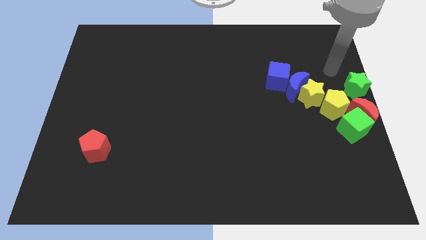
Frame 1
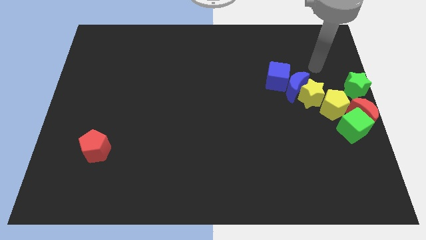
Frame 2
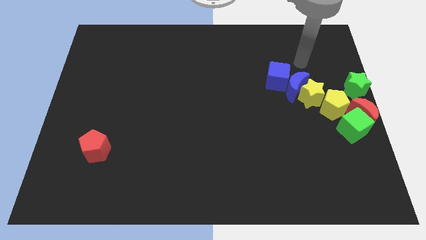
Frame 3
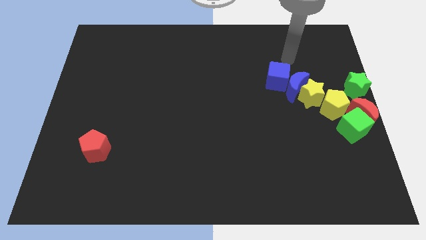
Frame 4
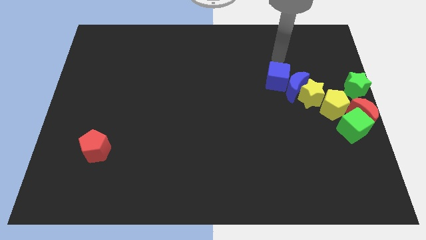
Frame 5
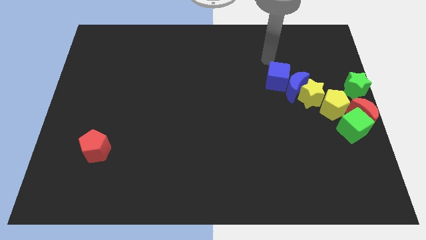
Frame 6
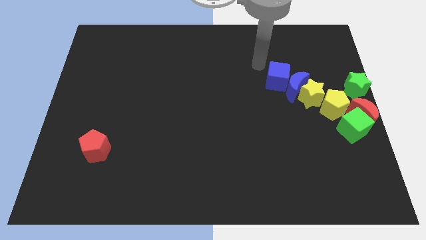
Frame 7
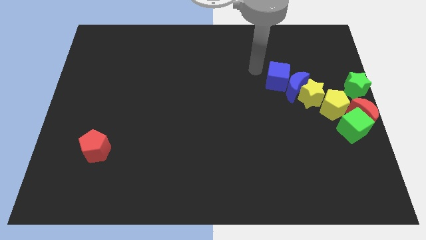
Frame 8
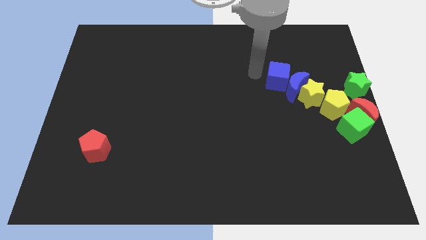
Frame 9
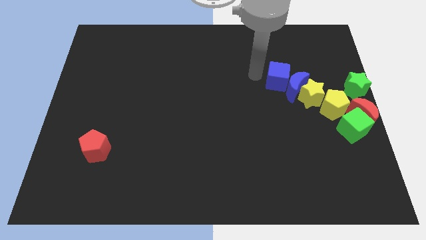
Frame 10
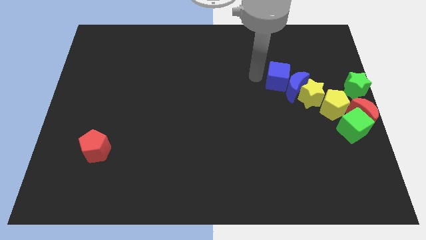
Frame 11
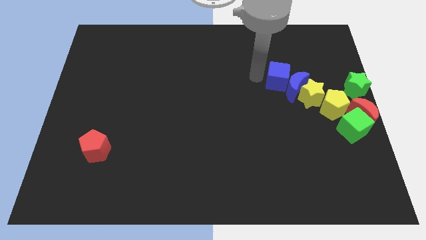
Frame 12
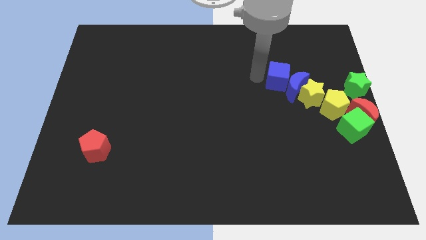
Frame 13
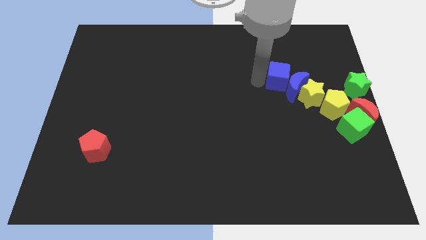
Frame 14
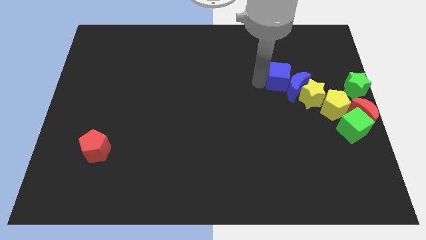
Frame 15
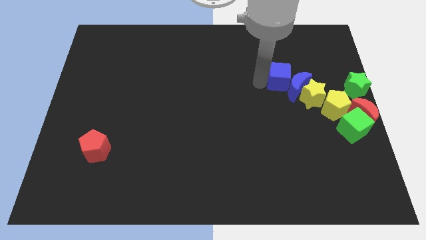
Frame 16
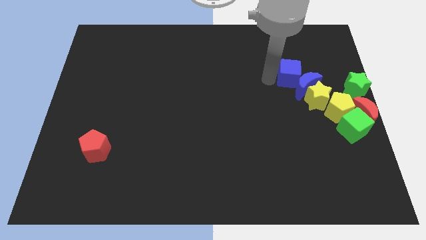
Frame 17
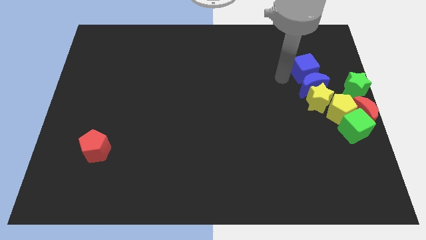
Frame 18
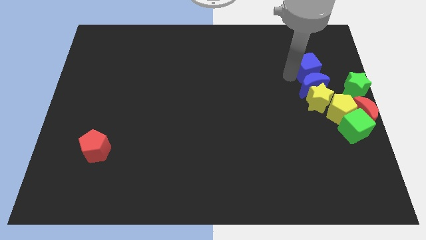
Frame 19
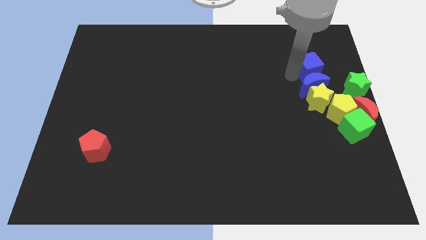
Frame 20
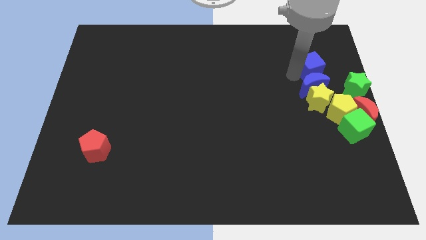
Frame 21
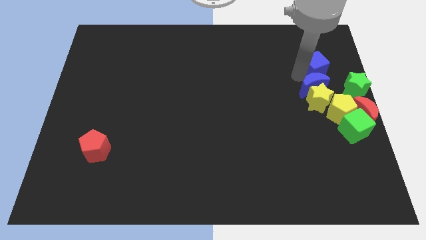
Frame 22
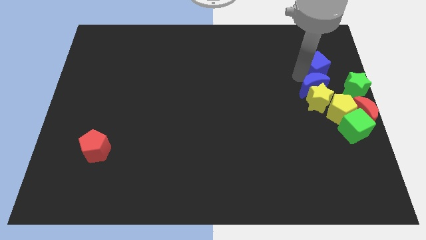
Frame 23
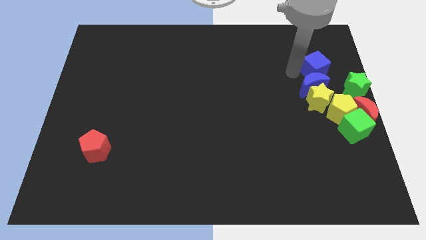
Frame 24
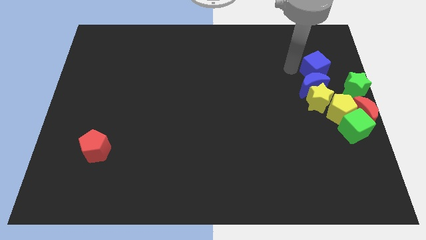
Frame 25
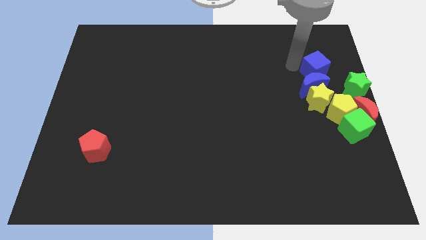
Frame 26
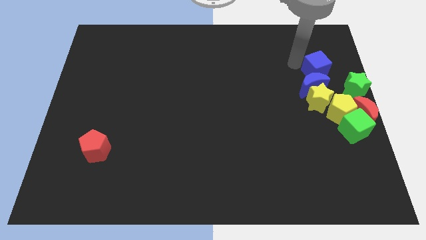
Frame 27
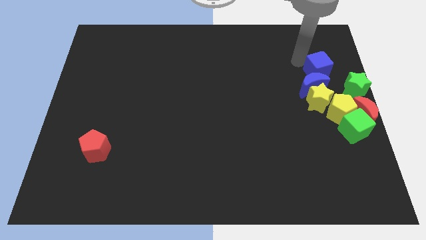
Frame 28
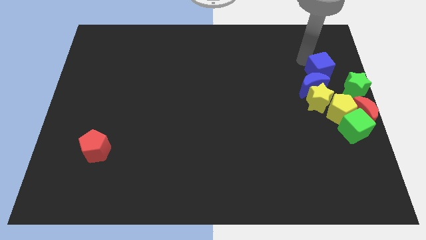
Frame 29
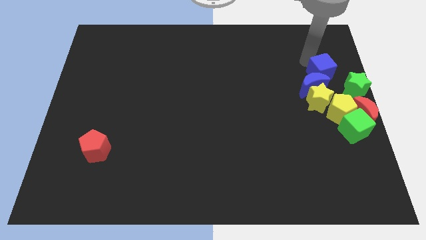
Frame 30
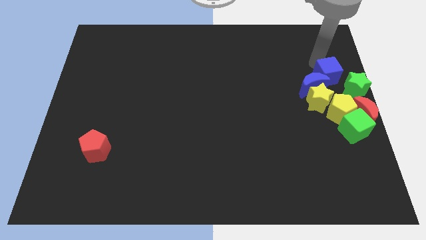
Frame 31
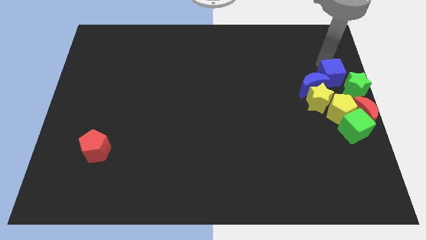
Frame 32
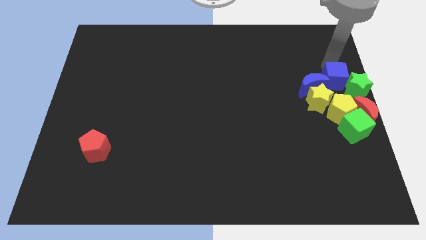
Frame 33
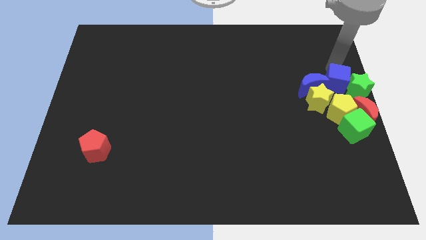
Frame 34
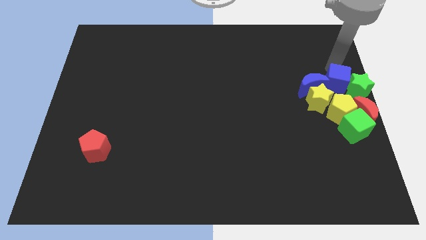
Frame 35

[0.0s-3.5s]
slide the blue cube to the right side of the blue moon

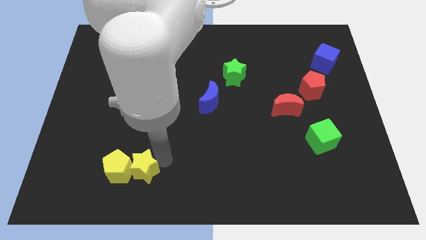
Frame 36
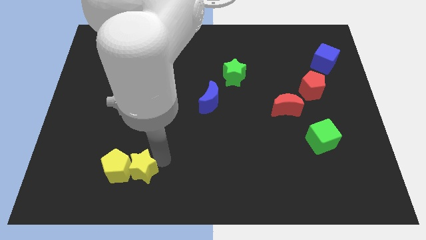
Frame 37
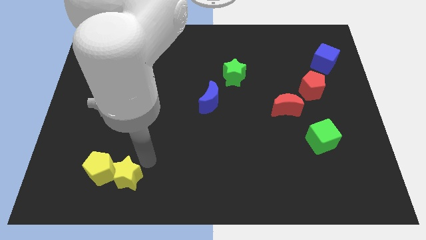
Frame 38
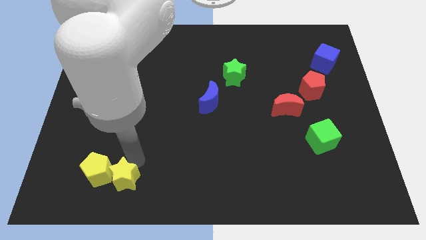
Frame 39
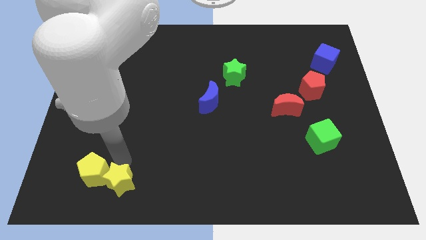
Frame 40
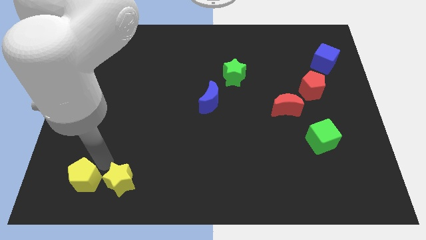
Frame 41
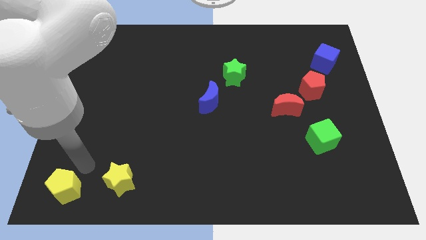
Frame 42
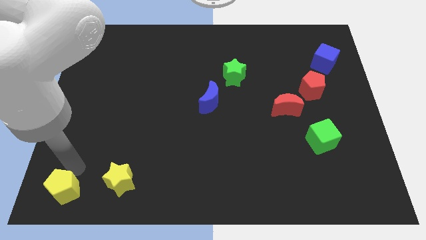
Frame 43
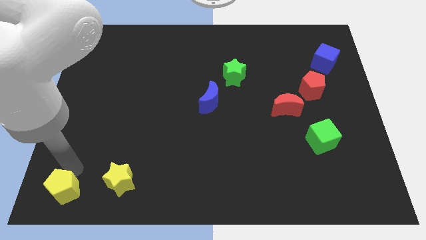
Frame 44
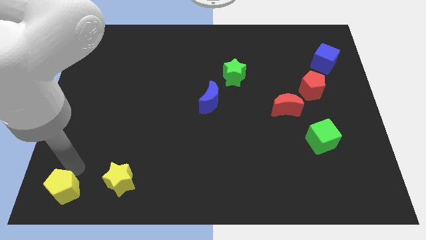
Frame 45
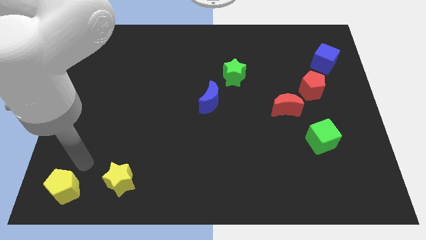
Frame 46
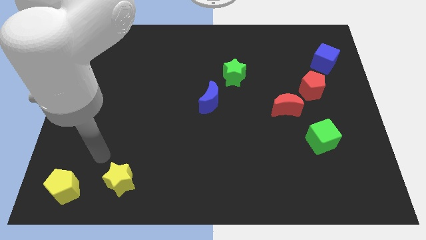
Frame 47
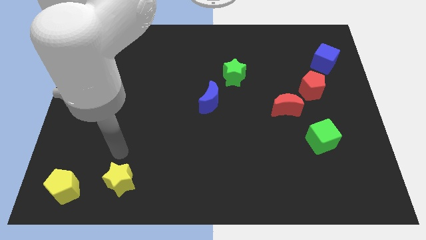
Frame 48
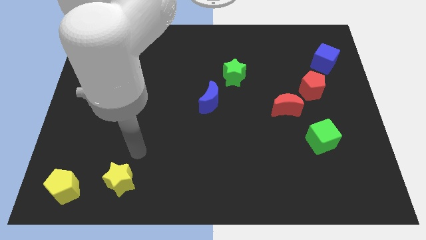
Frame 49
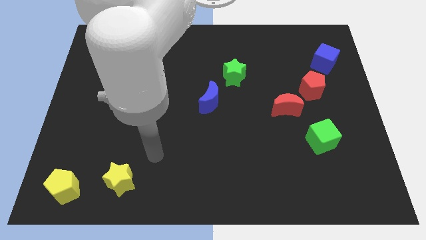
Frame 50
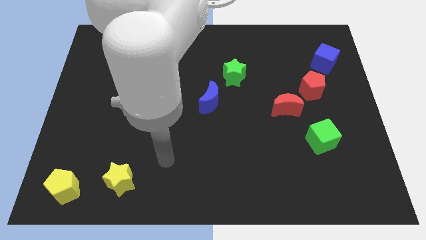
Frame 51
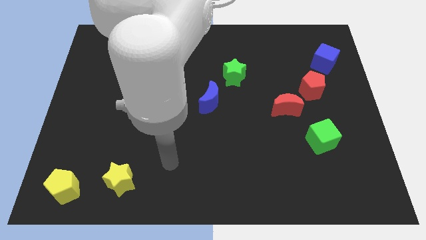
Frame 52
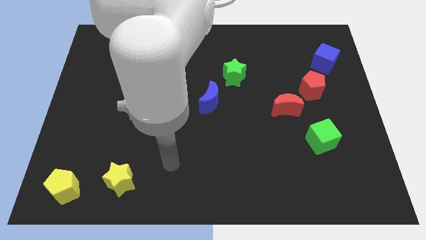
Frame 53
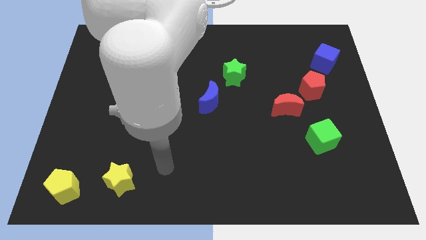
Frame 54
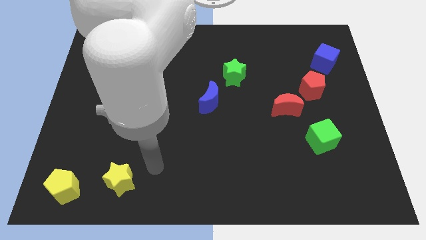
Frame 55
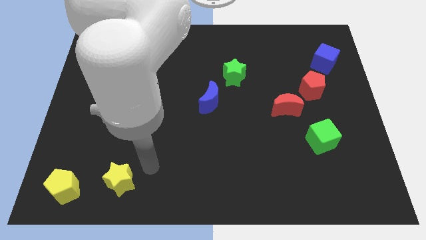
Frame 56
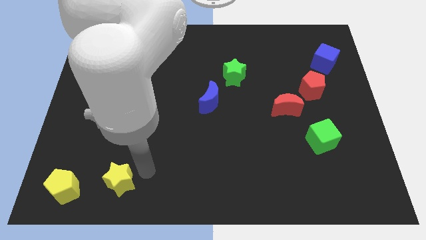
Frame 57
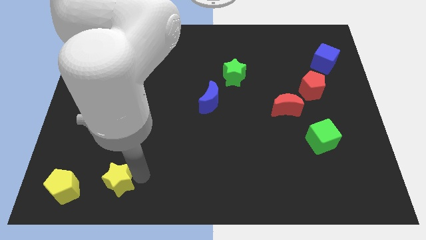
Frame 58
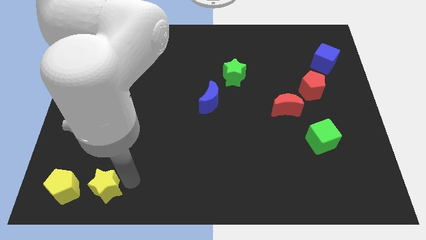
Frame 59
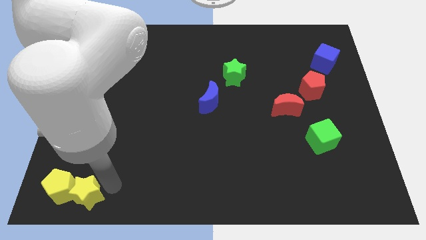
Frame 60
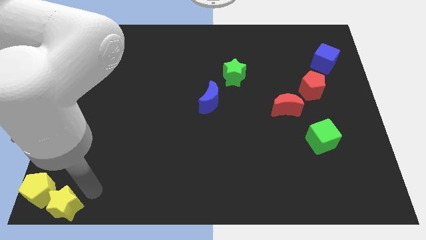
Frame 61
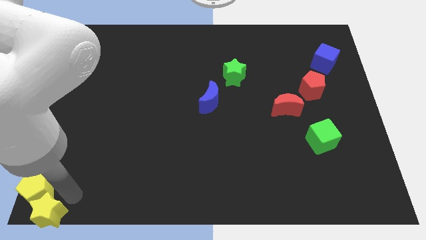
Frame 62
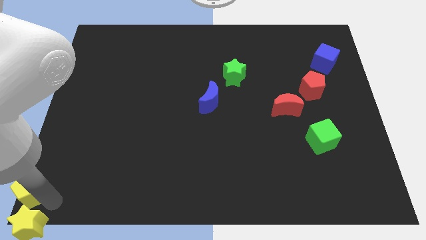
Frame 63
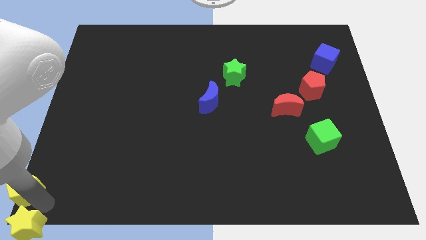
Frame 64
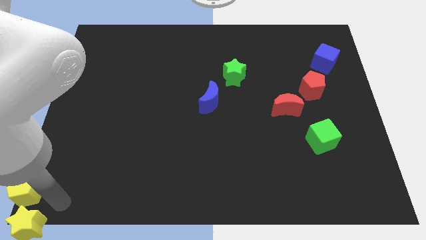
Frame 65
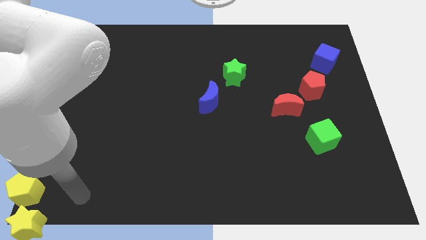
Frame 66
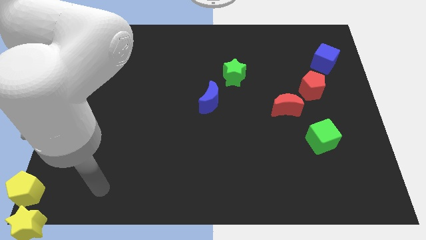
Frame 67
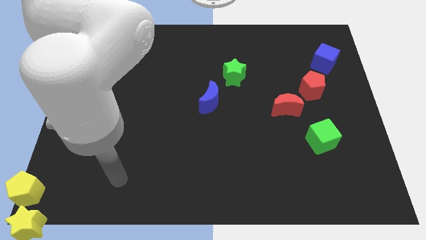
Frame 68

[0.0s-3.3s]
drag yellow star towards bottom left corner of the board

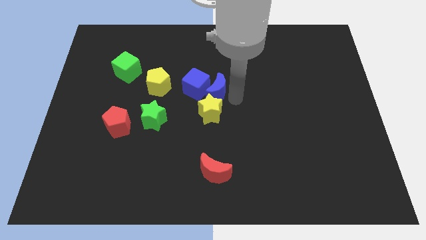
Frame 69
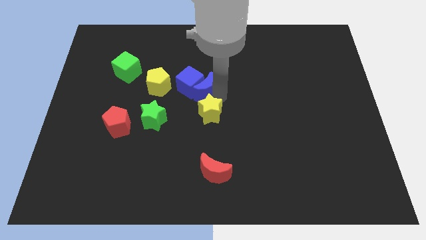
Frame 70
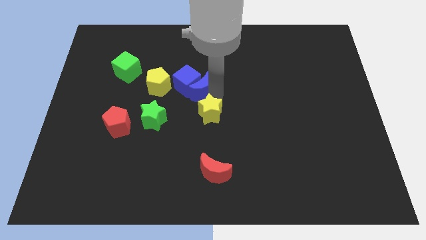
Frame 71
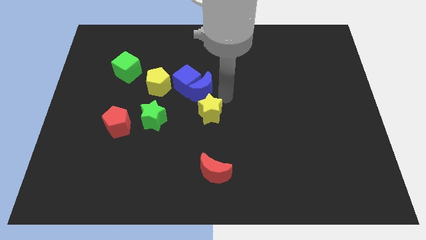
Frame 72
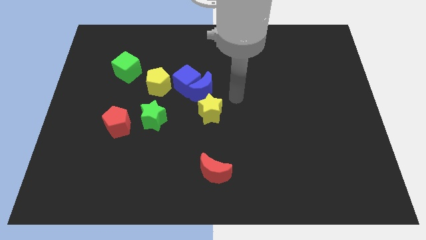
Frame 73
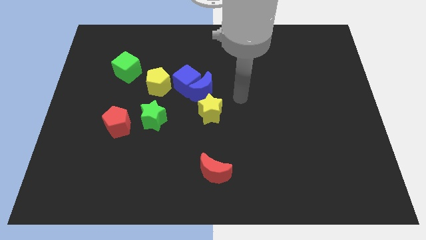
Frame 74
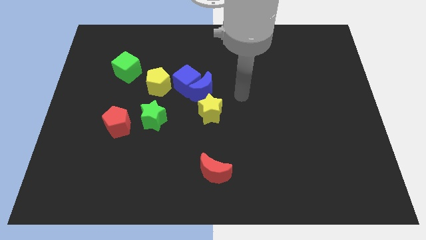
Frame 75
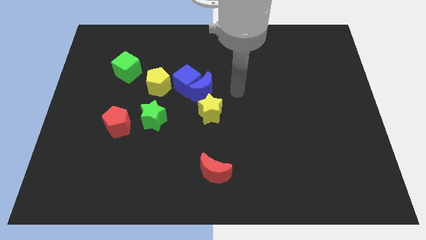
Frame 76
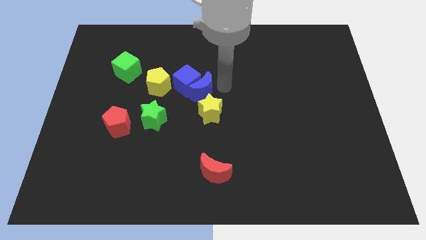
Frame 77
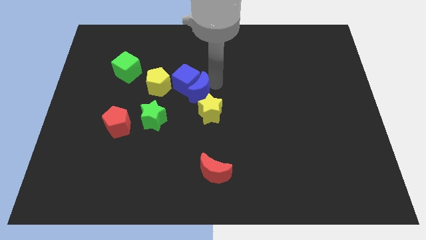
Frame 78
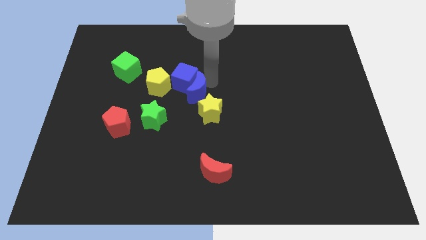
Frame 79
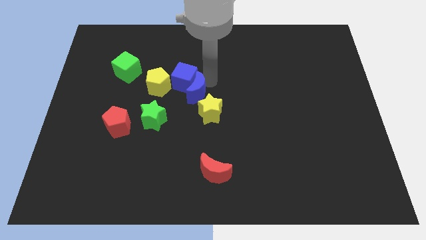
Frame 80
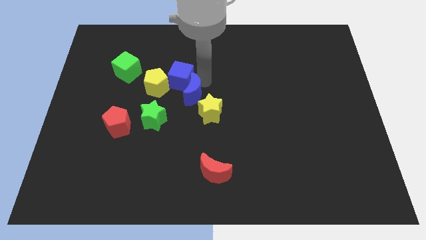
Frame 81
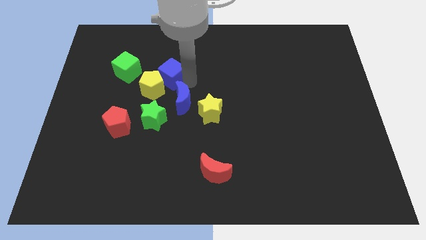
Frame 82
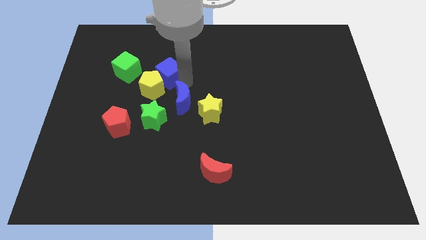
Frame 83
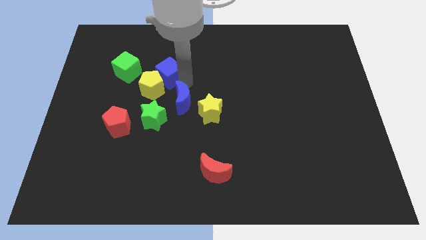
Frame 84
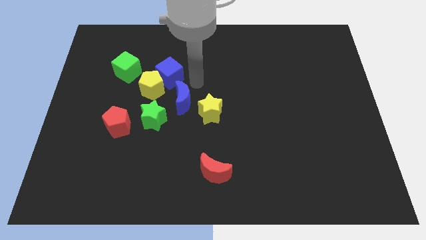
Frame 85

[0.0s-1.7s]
place the blue cube to the top right side of the yellow pentagon

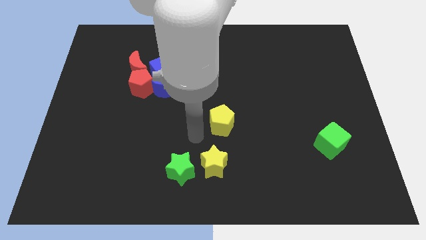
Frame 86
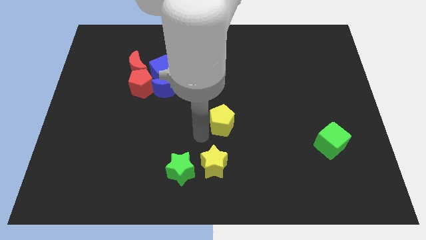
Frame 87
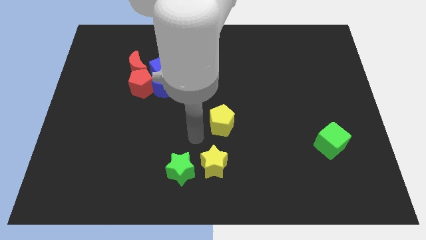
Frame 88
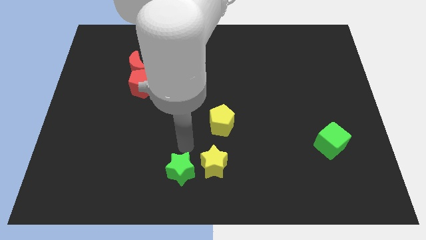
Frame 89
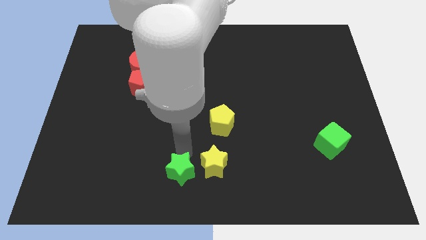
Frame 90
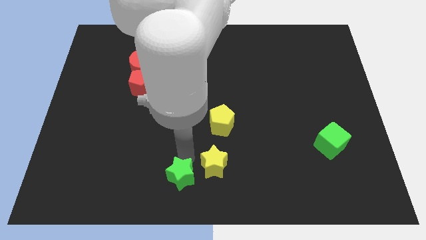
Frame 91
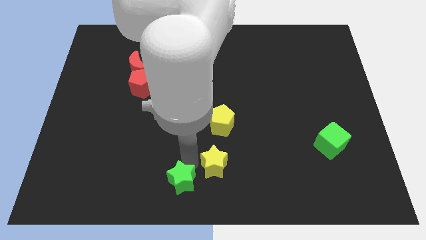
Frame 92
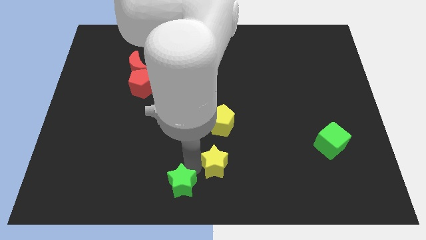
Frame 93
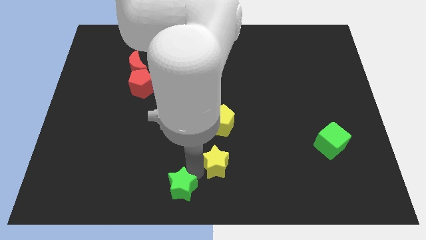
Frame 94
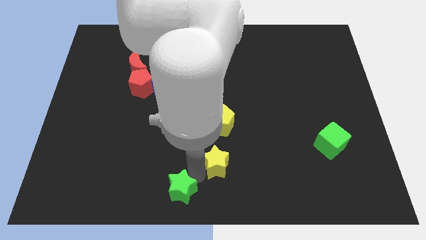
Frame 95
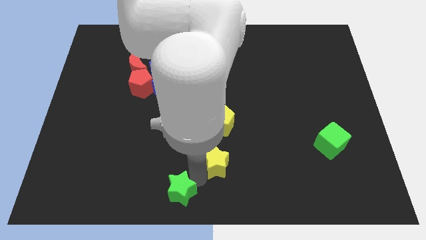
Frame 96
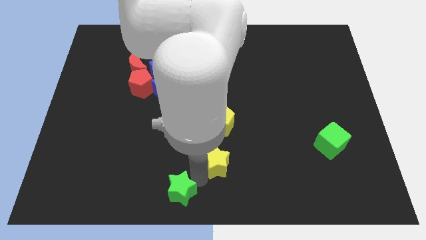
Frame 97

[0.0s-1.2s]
push the green star towards the bottom center
